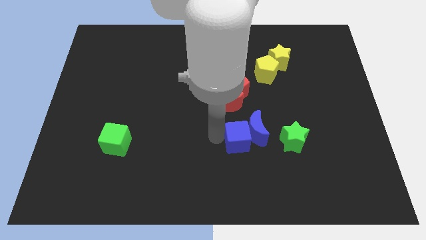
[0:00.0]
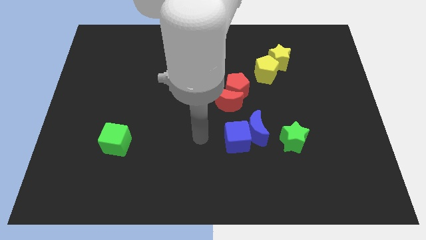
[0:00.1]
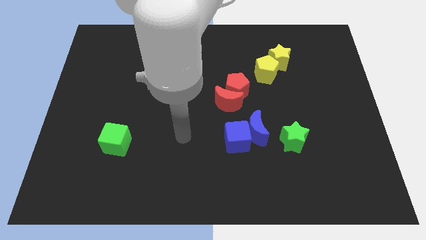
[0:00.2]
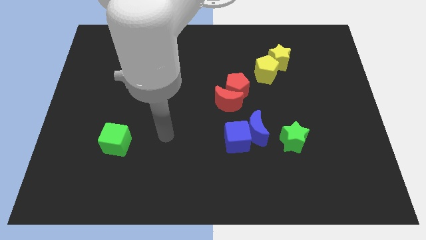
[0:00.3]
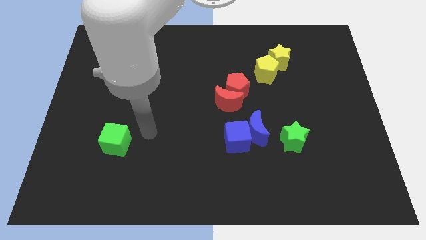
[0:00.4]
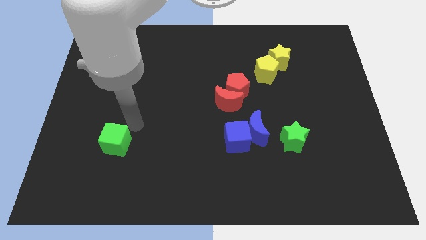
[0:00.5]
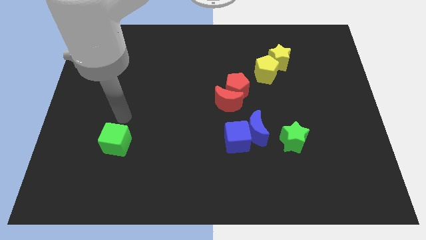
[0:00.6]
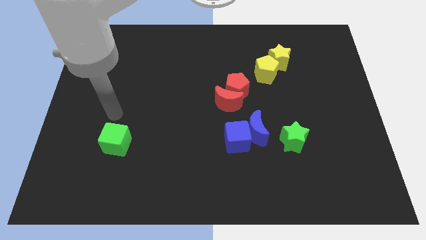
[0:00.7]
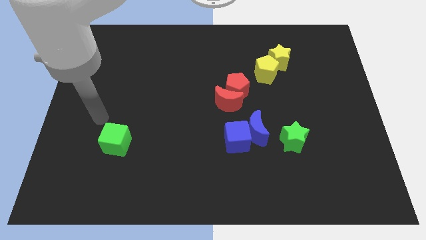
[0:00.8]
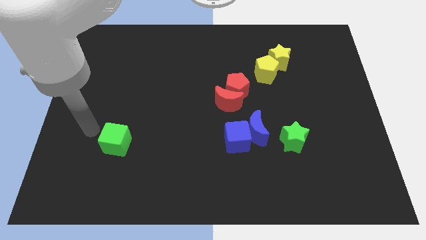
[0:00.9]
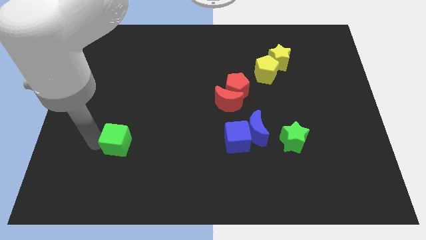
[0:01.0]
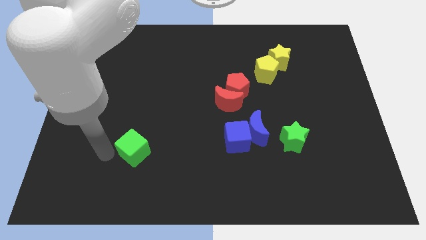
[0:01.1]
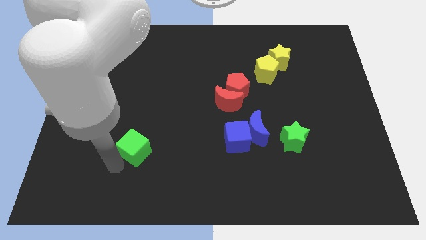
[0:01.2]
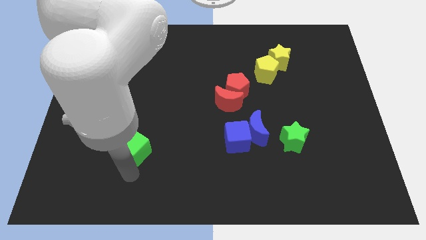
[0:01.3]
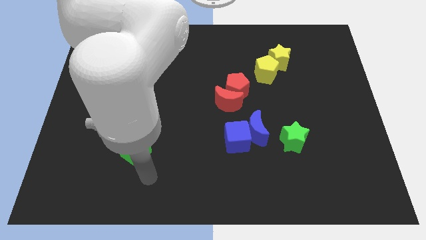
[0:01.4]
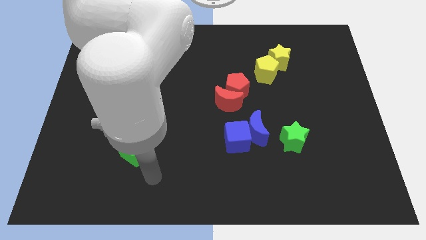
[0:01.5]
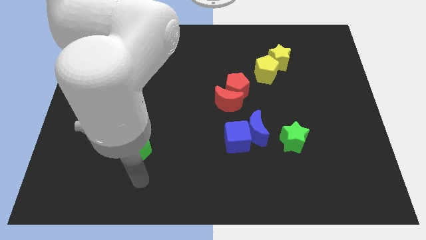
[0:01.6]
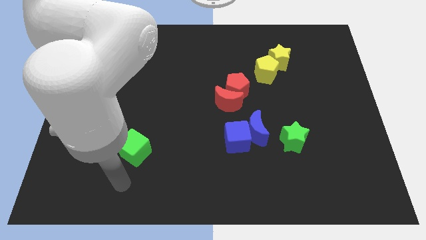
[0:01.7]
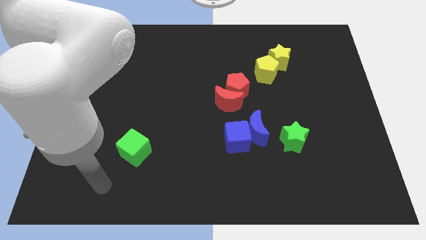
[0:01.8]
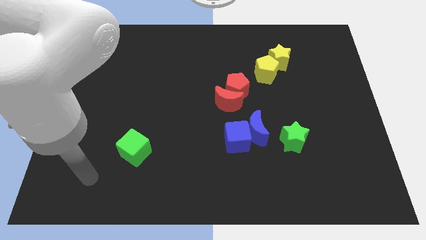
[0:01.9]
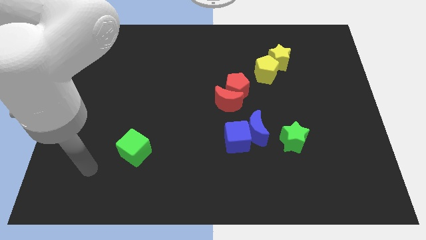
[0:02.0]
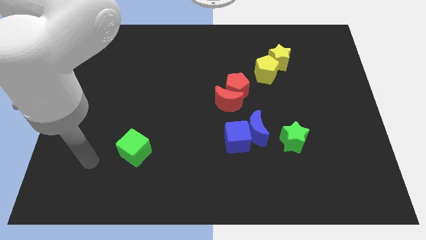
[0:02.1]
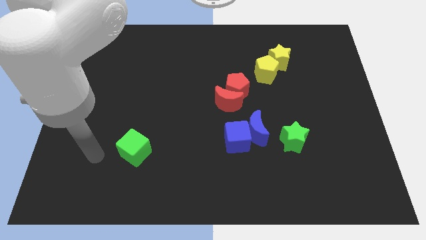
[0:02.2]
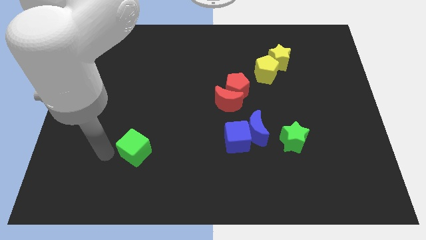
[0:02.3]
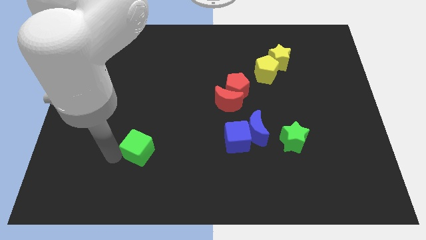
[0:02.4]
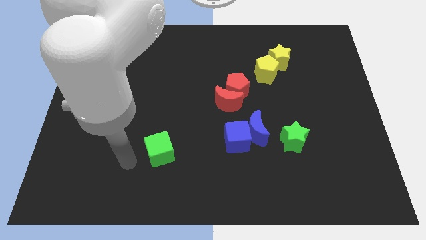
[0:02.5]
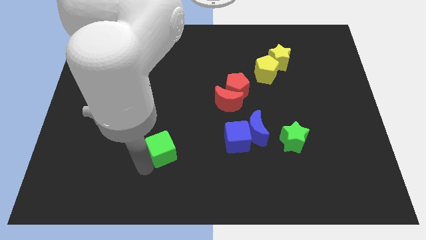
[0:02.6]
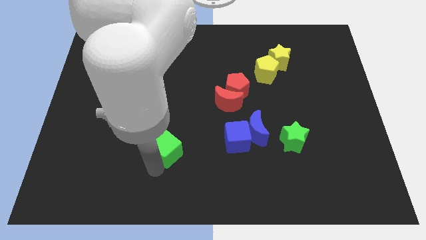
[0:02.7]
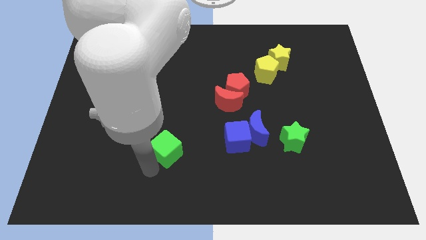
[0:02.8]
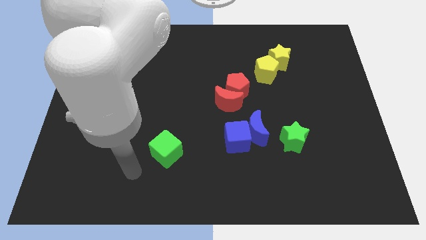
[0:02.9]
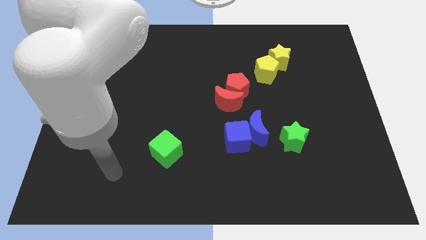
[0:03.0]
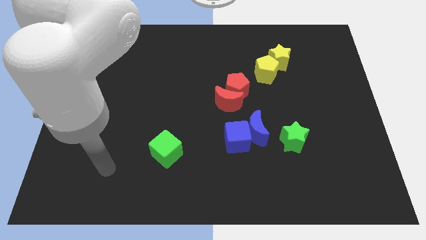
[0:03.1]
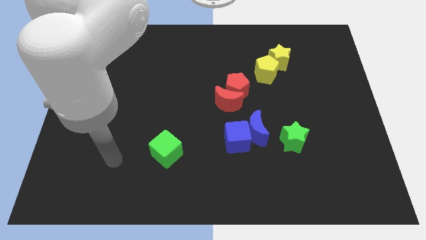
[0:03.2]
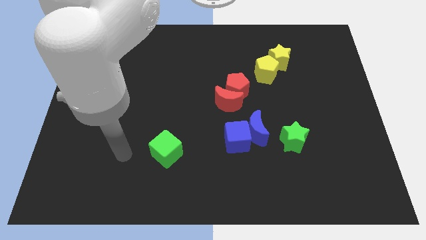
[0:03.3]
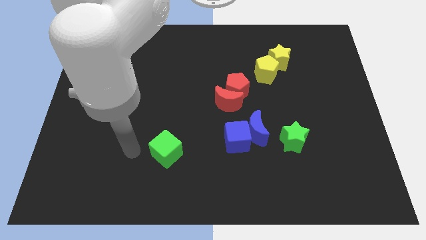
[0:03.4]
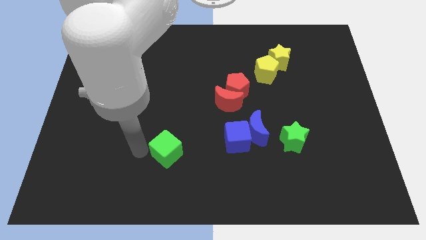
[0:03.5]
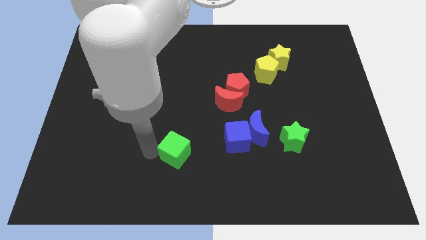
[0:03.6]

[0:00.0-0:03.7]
move the green cube to the left of the blue cube

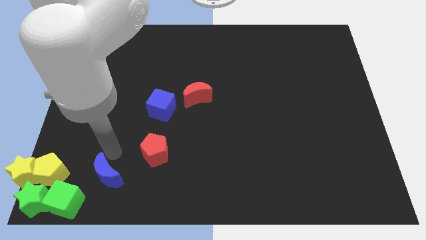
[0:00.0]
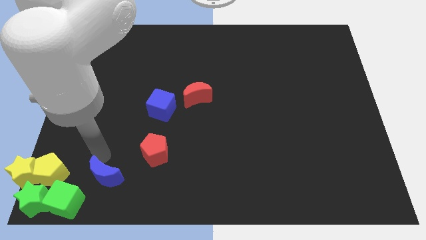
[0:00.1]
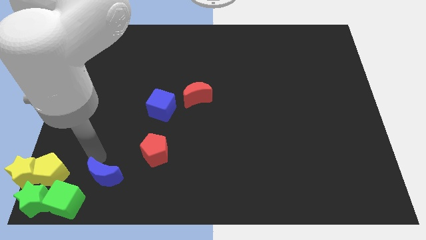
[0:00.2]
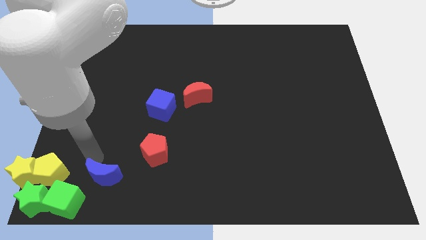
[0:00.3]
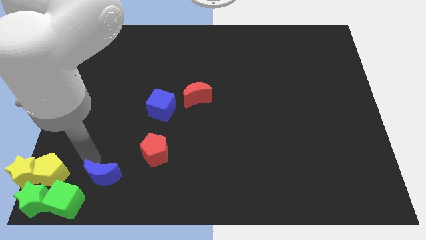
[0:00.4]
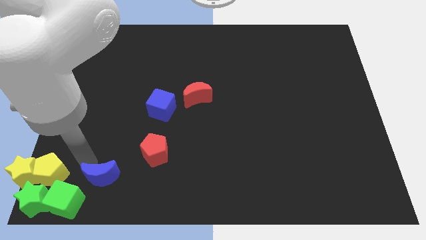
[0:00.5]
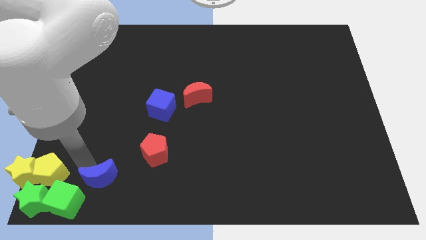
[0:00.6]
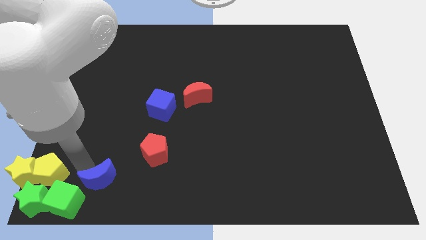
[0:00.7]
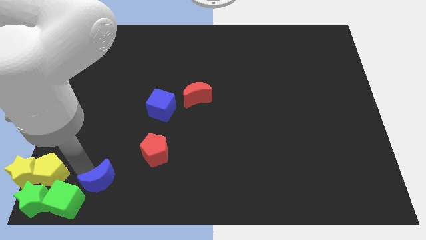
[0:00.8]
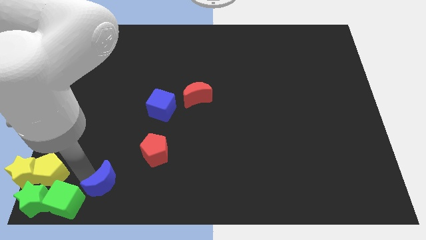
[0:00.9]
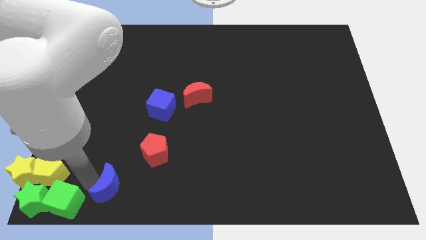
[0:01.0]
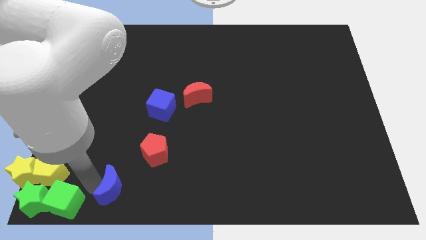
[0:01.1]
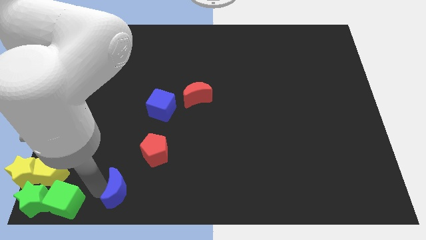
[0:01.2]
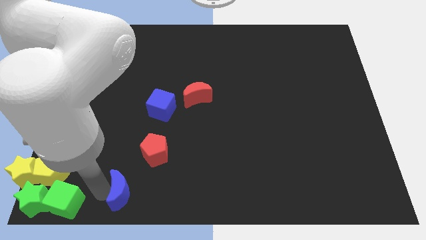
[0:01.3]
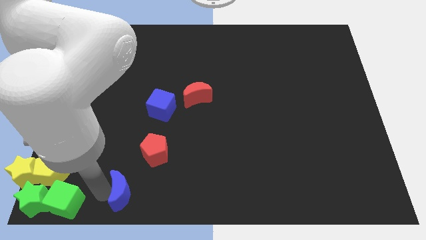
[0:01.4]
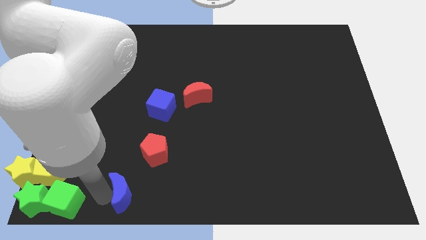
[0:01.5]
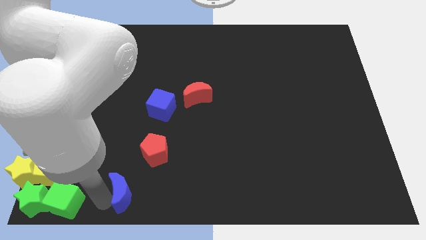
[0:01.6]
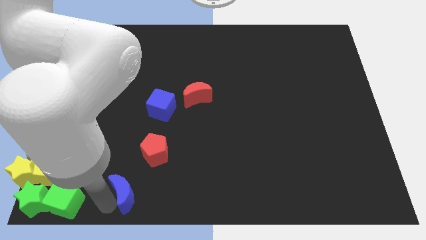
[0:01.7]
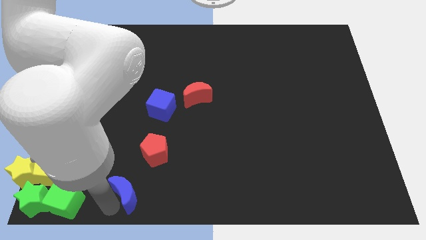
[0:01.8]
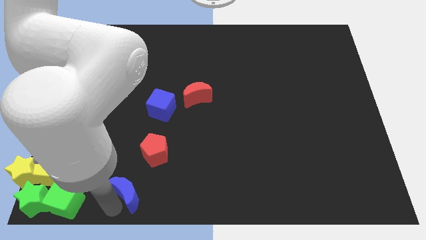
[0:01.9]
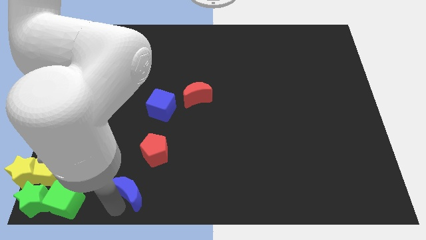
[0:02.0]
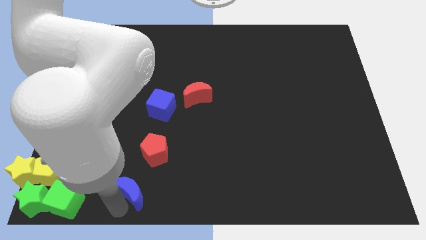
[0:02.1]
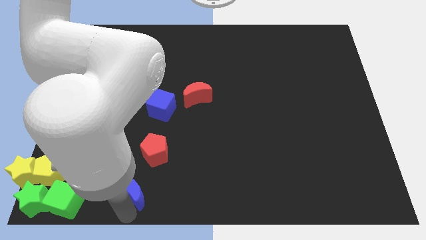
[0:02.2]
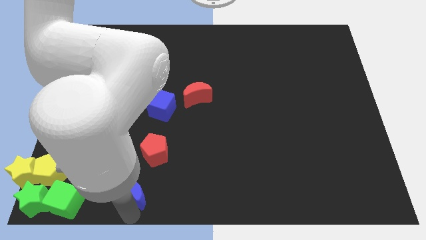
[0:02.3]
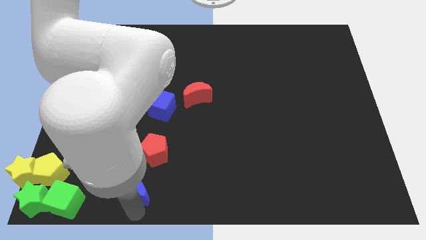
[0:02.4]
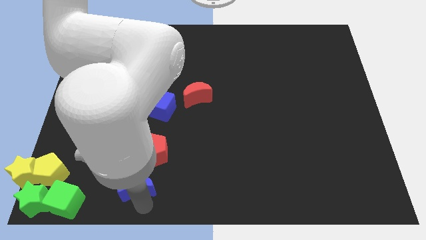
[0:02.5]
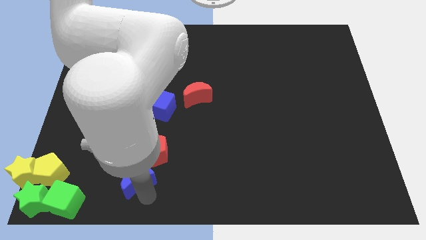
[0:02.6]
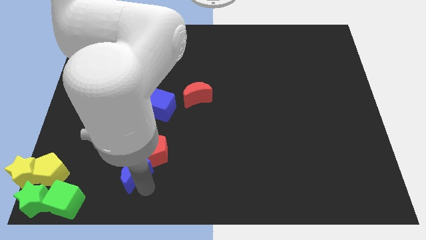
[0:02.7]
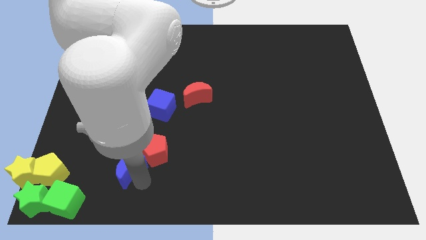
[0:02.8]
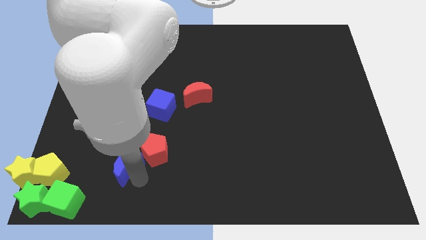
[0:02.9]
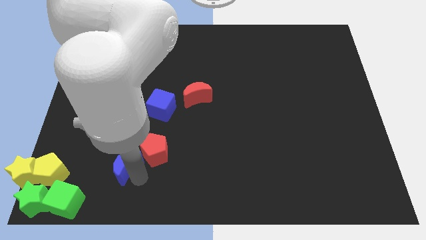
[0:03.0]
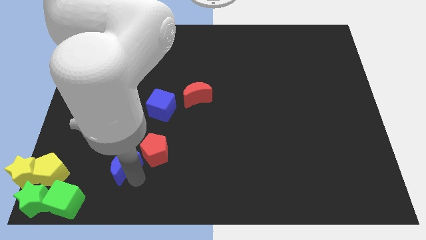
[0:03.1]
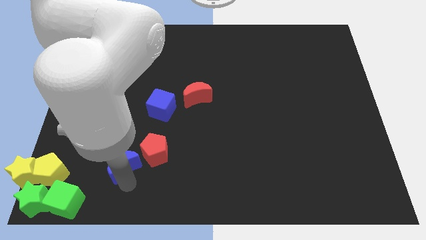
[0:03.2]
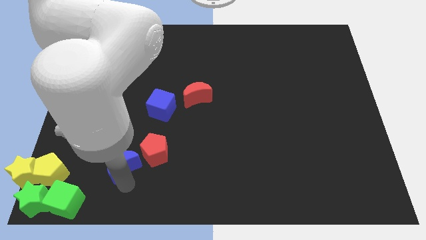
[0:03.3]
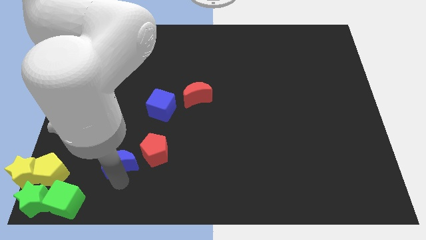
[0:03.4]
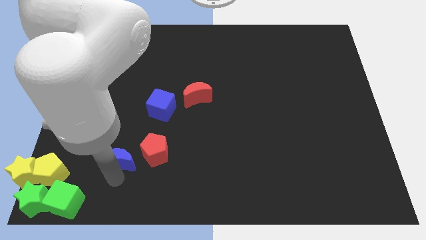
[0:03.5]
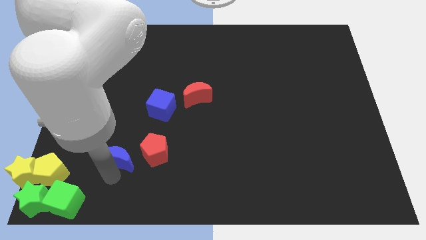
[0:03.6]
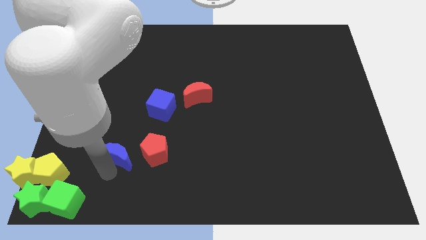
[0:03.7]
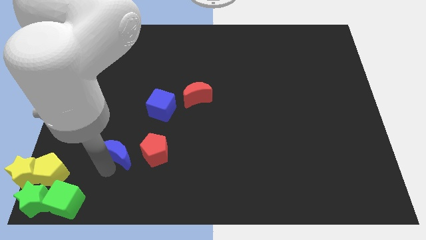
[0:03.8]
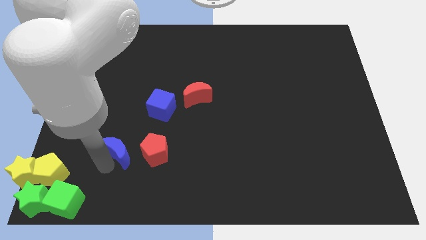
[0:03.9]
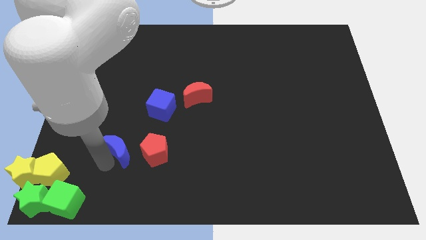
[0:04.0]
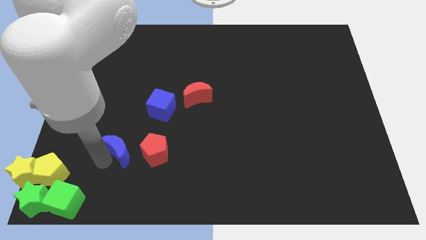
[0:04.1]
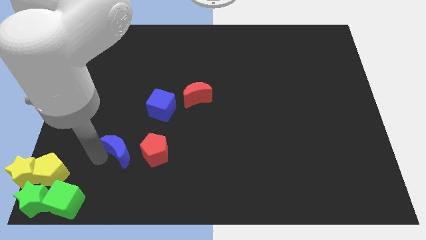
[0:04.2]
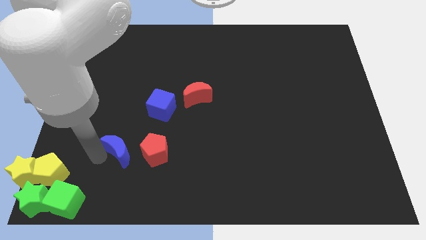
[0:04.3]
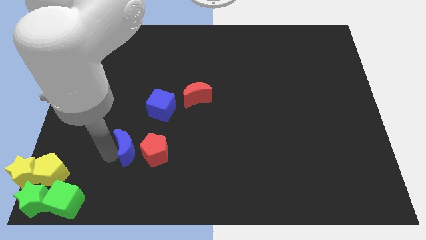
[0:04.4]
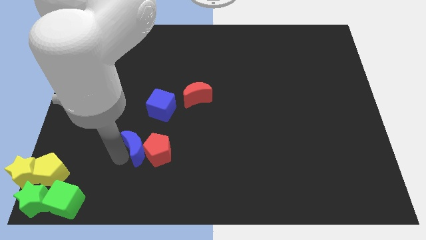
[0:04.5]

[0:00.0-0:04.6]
place the blue moon to the left of red pentagon

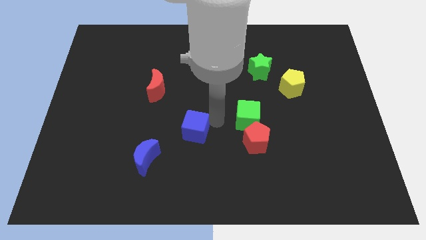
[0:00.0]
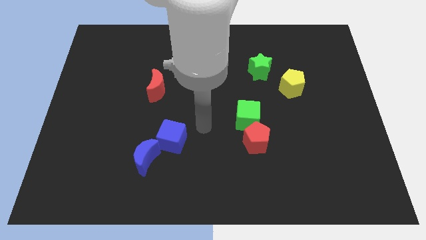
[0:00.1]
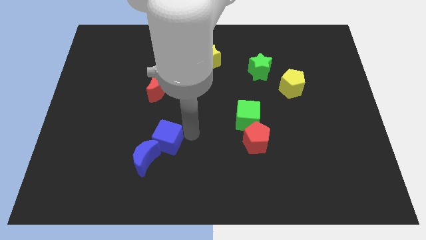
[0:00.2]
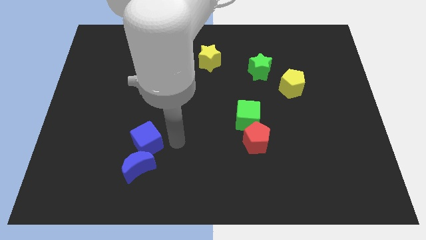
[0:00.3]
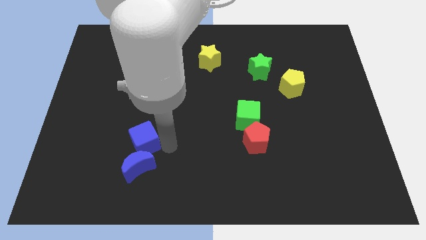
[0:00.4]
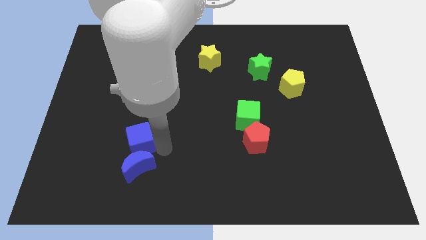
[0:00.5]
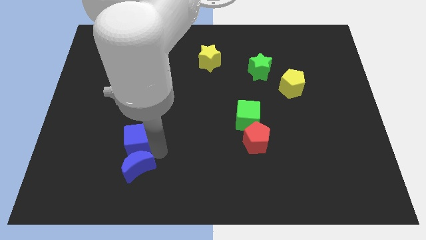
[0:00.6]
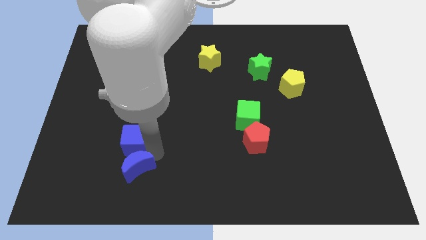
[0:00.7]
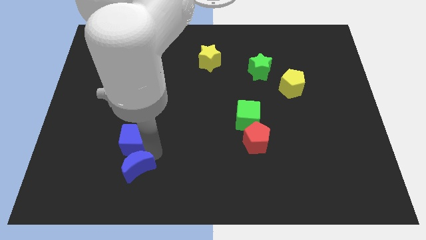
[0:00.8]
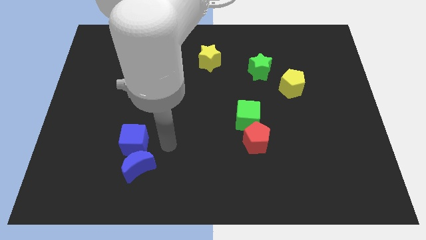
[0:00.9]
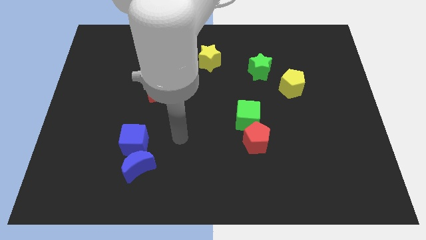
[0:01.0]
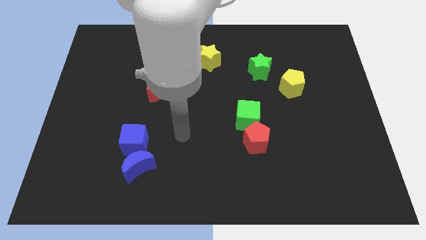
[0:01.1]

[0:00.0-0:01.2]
place the blue cube at the top of the blue moon
